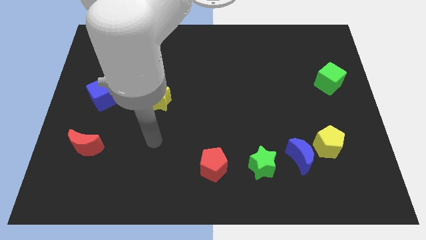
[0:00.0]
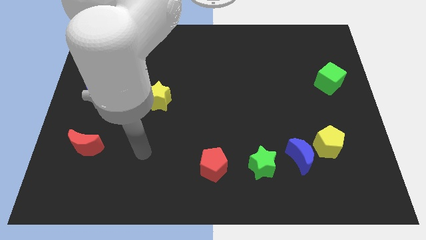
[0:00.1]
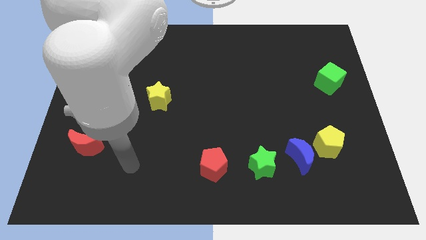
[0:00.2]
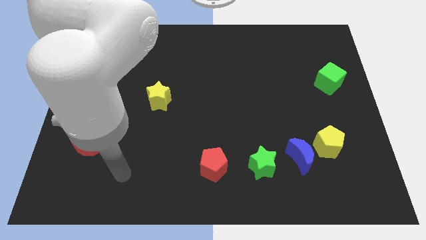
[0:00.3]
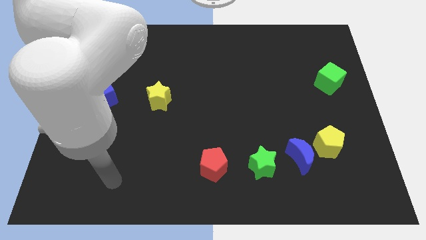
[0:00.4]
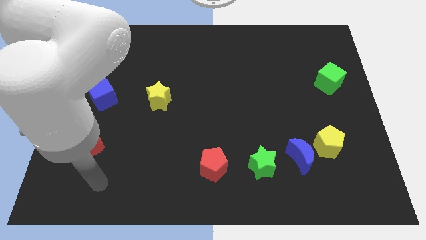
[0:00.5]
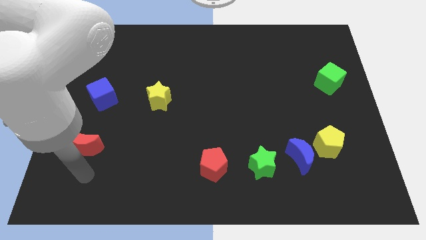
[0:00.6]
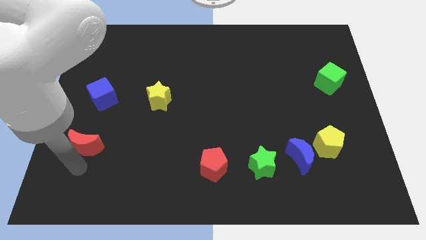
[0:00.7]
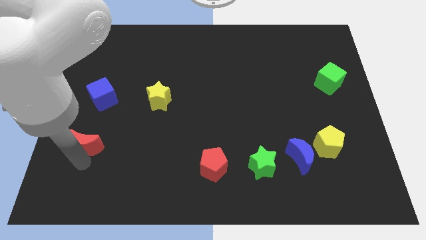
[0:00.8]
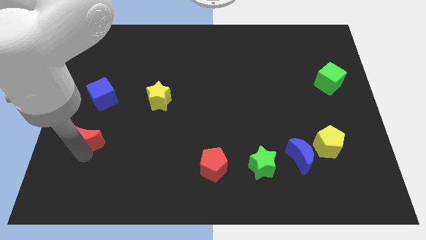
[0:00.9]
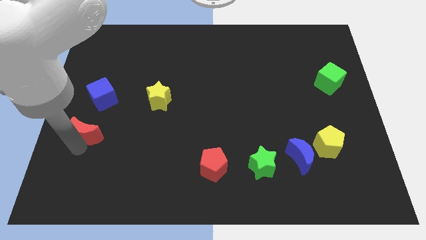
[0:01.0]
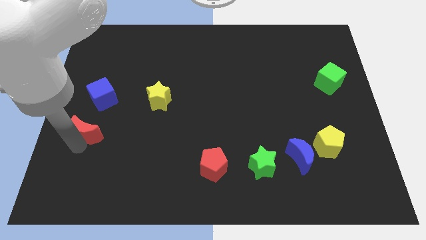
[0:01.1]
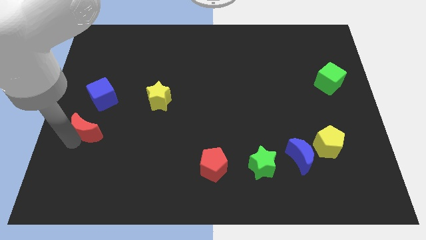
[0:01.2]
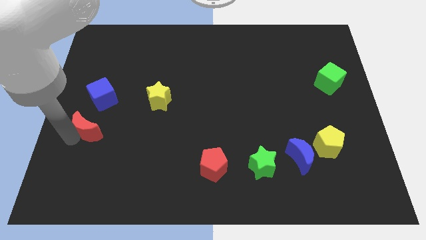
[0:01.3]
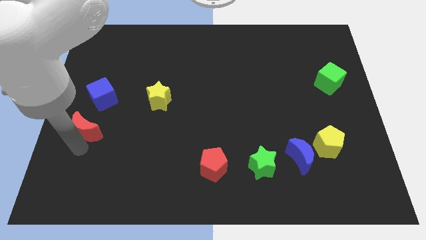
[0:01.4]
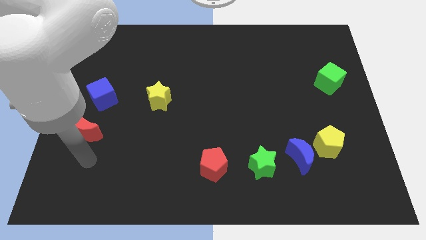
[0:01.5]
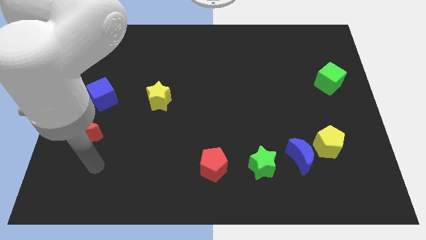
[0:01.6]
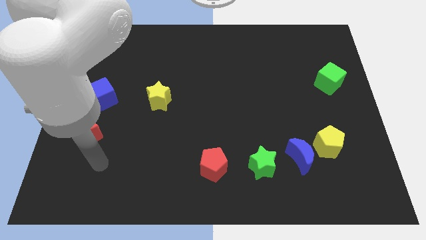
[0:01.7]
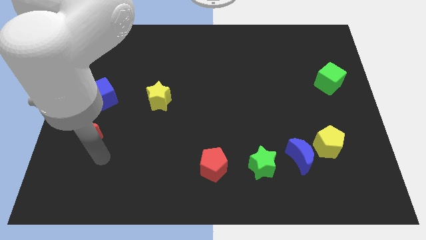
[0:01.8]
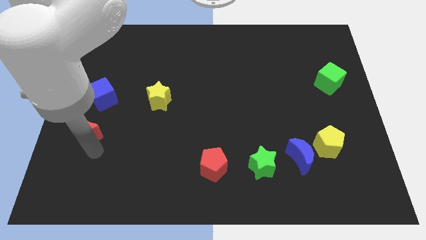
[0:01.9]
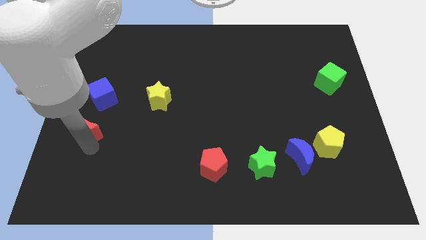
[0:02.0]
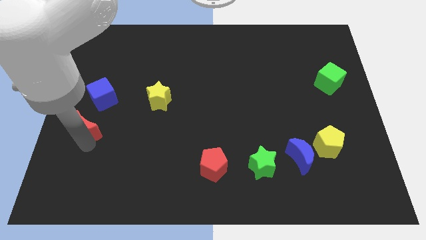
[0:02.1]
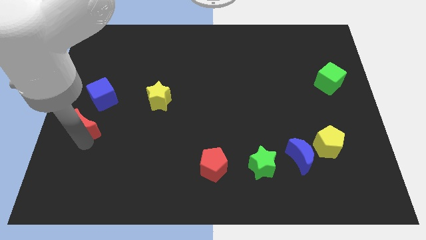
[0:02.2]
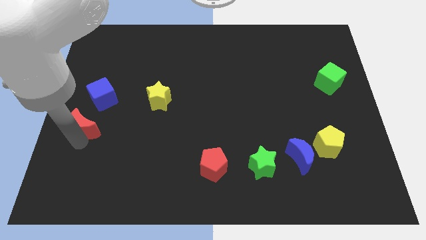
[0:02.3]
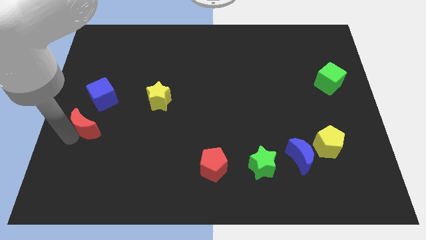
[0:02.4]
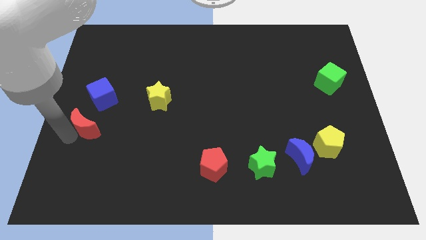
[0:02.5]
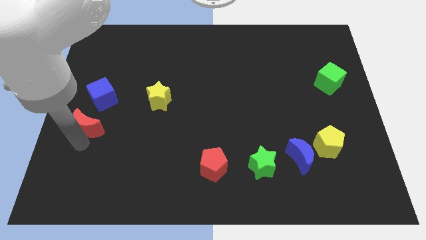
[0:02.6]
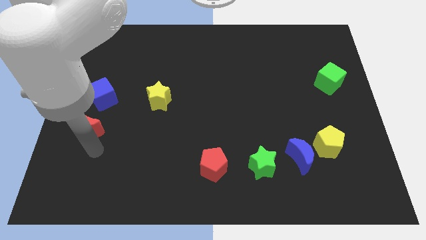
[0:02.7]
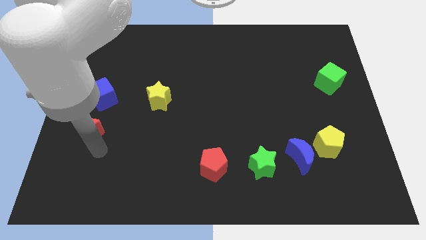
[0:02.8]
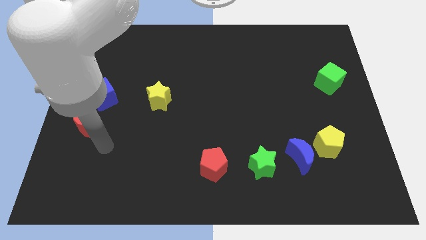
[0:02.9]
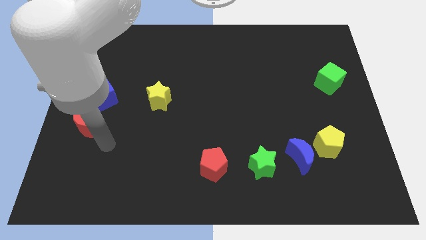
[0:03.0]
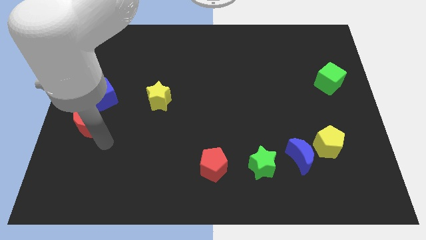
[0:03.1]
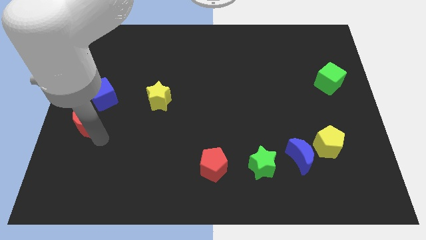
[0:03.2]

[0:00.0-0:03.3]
place the red moon below the blue cube

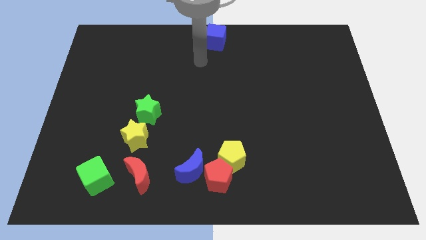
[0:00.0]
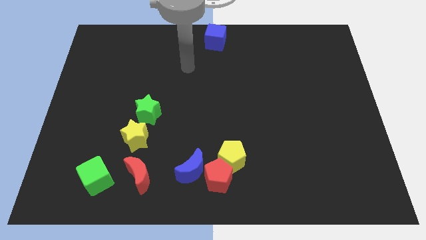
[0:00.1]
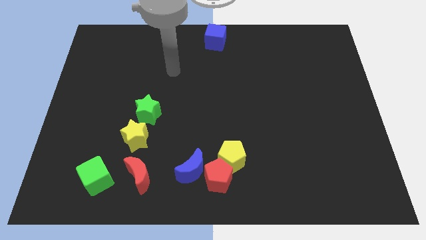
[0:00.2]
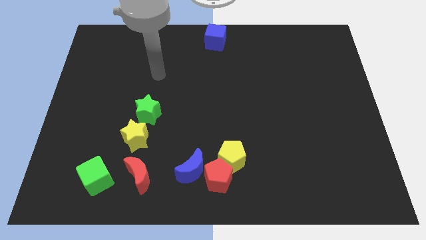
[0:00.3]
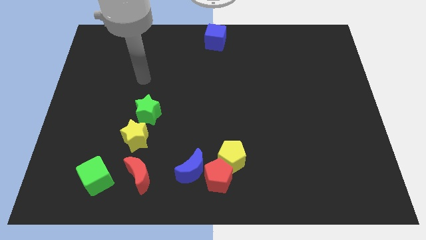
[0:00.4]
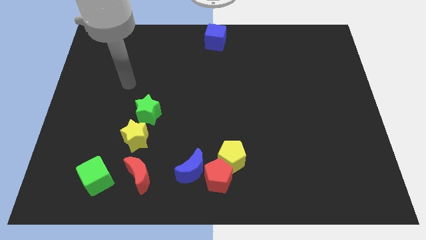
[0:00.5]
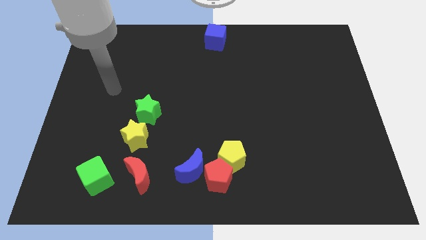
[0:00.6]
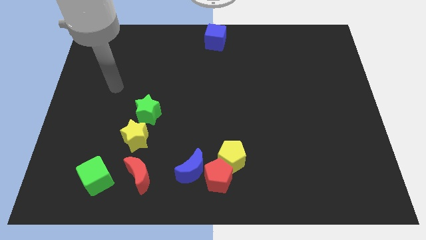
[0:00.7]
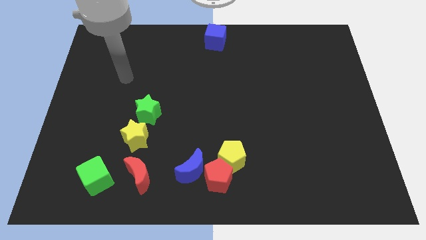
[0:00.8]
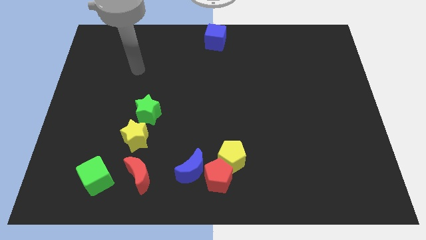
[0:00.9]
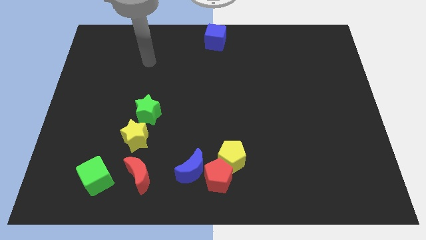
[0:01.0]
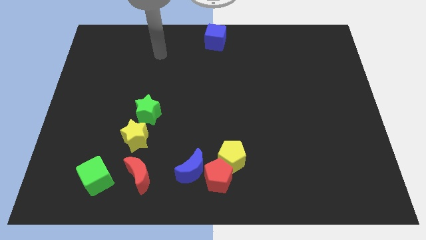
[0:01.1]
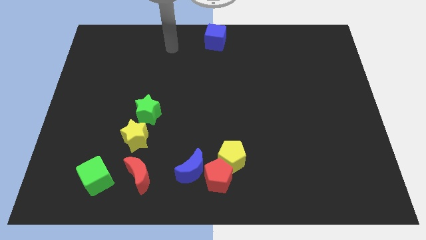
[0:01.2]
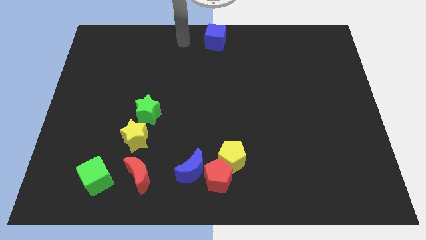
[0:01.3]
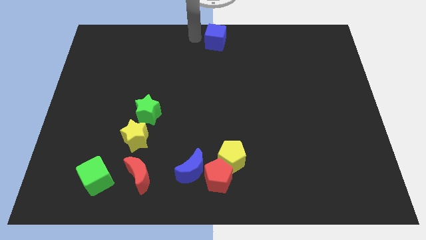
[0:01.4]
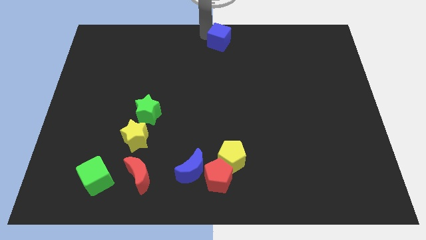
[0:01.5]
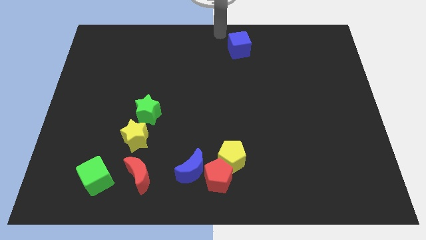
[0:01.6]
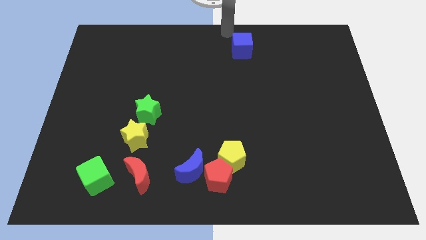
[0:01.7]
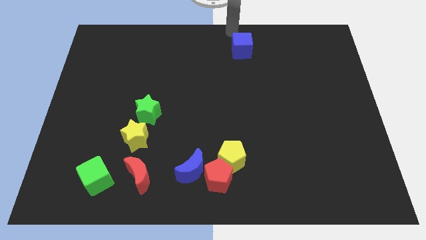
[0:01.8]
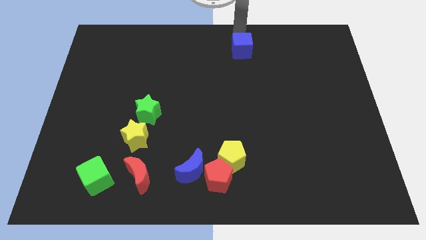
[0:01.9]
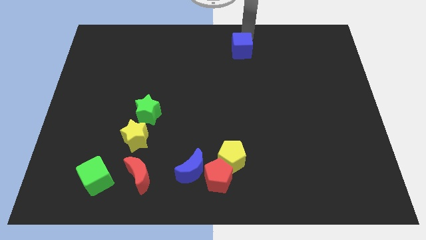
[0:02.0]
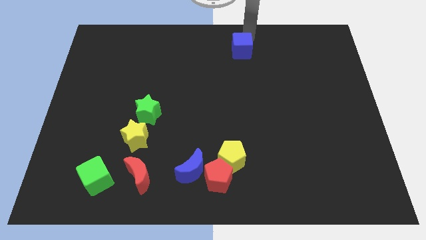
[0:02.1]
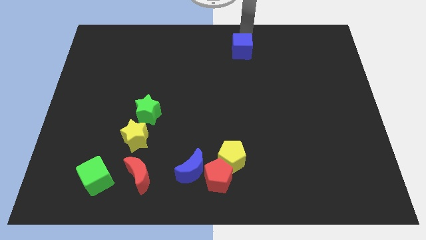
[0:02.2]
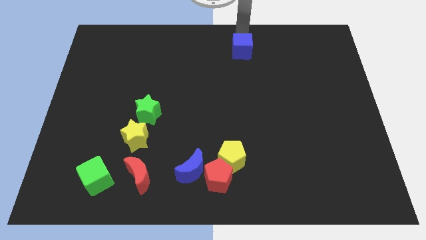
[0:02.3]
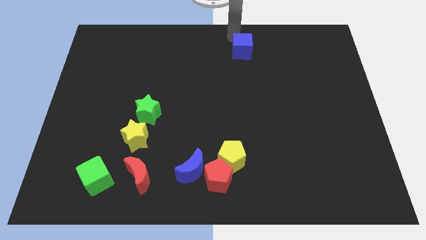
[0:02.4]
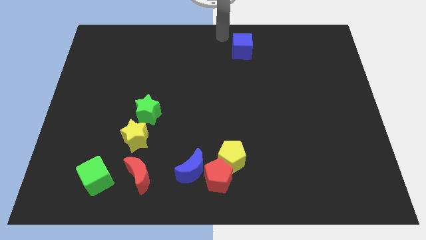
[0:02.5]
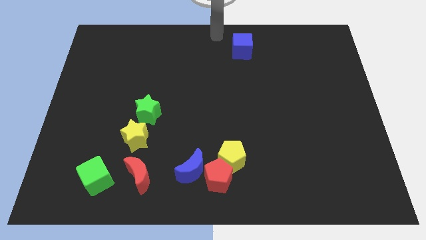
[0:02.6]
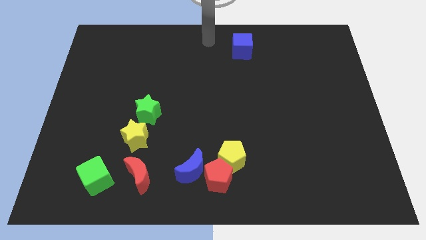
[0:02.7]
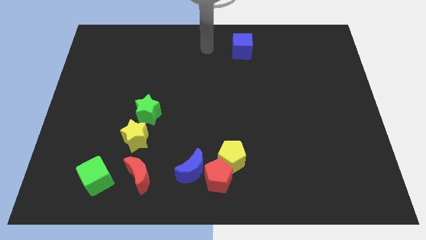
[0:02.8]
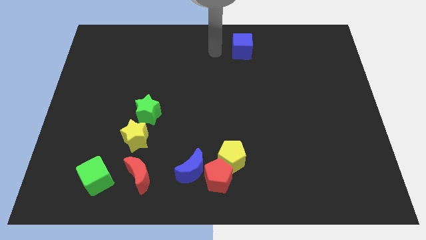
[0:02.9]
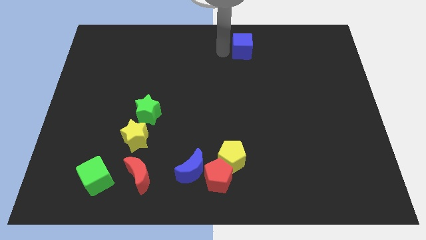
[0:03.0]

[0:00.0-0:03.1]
move the blue cube to the top of the yellow pentagon

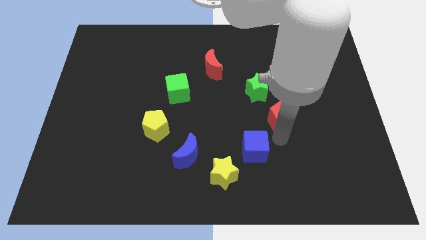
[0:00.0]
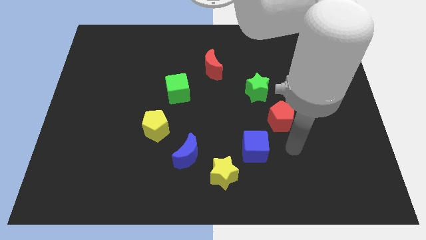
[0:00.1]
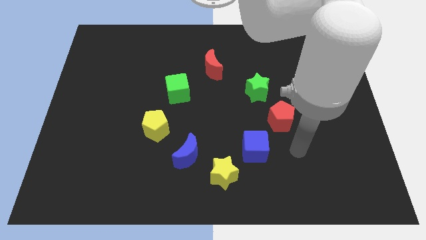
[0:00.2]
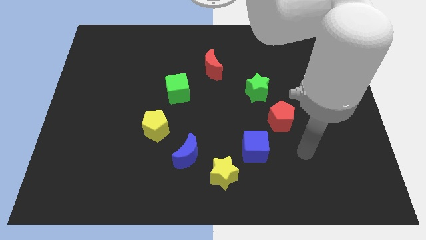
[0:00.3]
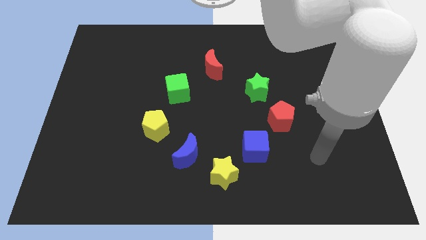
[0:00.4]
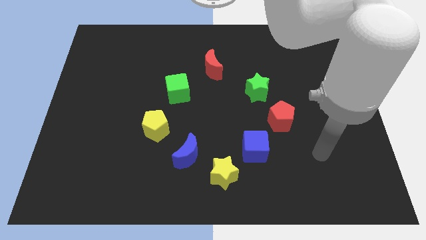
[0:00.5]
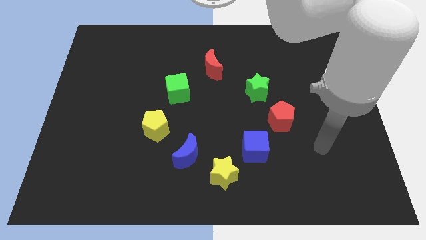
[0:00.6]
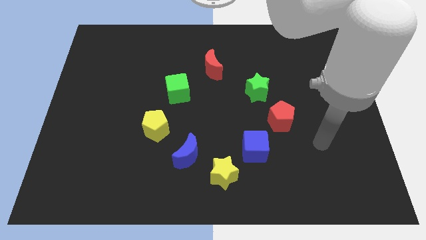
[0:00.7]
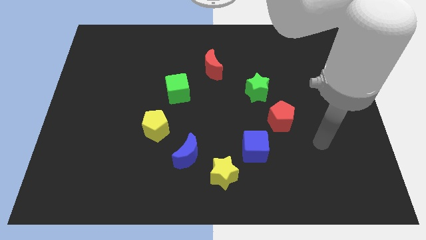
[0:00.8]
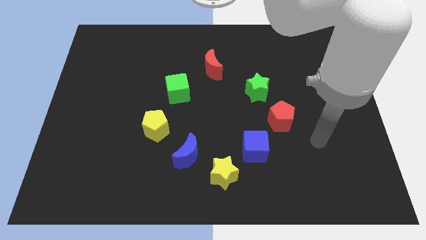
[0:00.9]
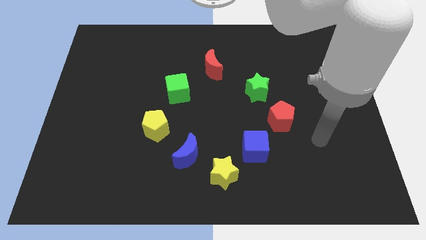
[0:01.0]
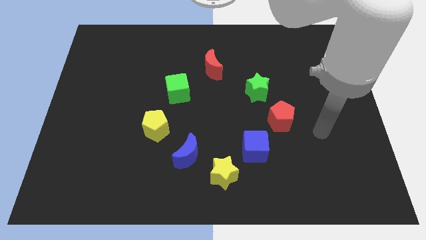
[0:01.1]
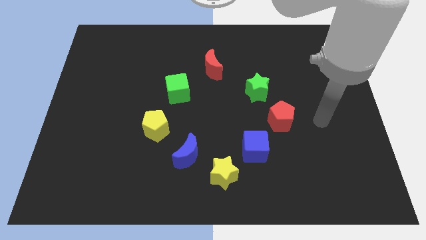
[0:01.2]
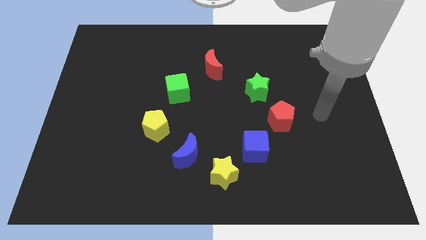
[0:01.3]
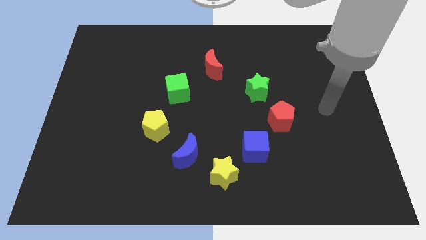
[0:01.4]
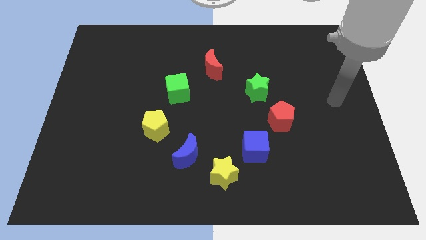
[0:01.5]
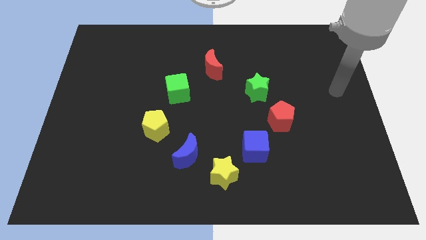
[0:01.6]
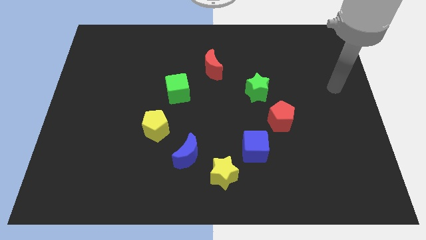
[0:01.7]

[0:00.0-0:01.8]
move your hand towards the top right

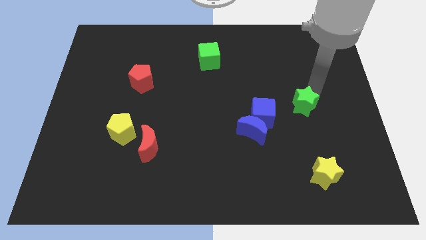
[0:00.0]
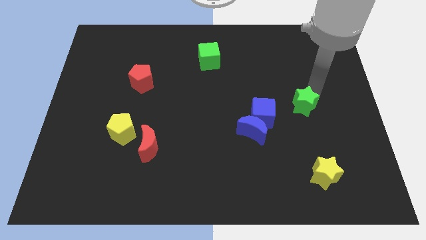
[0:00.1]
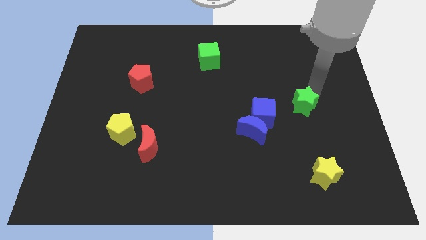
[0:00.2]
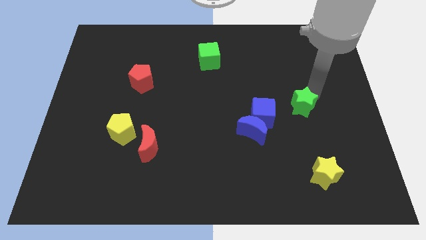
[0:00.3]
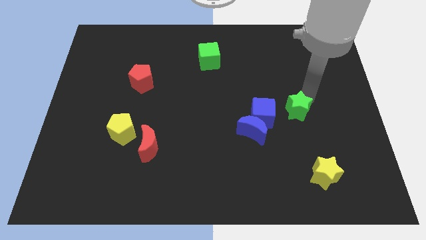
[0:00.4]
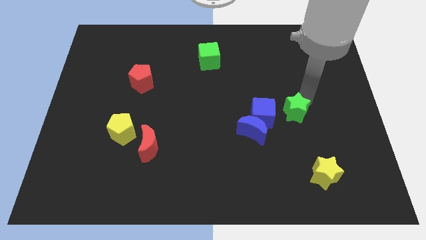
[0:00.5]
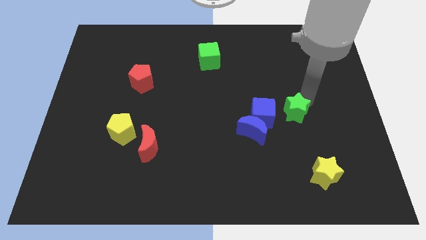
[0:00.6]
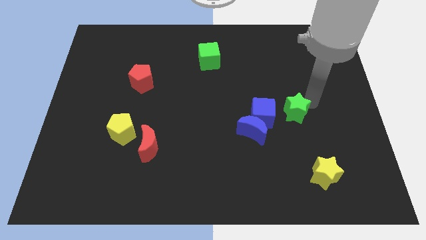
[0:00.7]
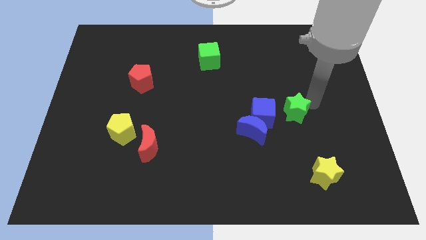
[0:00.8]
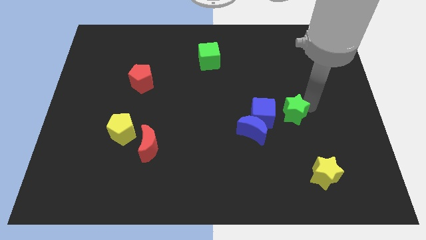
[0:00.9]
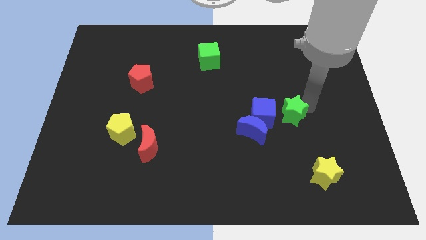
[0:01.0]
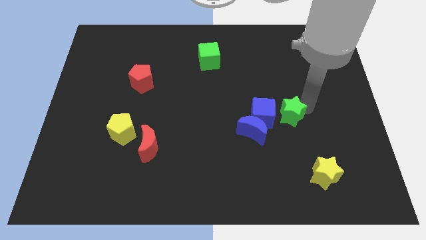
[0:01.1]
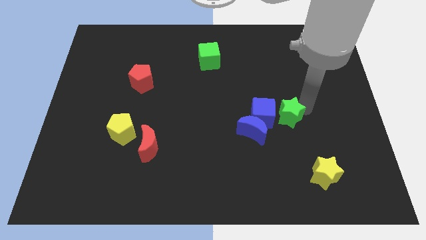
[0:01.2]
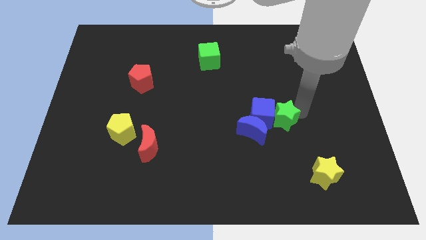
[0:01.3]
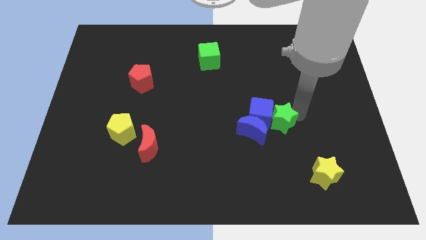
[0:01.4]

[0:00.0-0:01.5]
place the green star to the right of the blue cube
